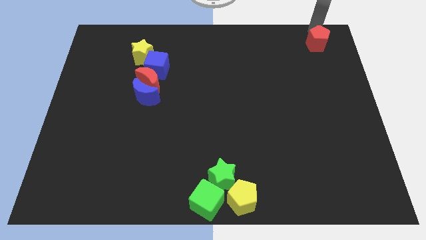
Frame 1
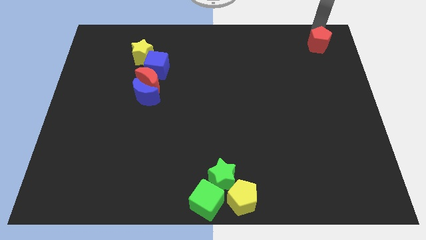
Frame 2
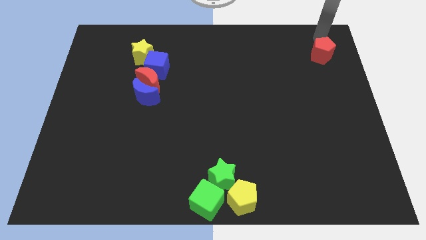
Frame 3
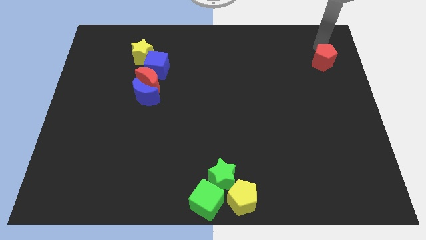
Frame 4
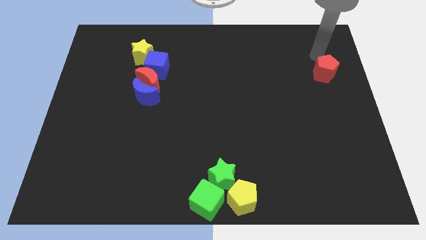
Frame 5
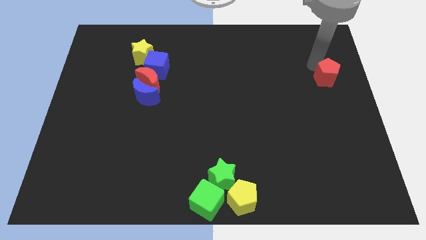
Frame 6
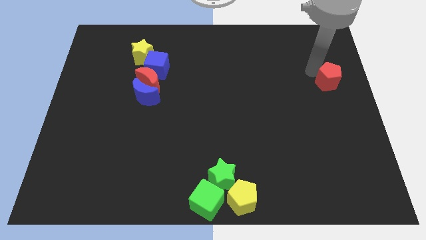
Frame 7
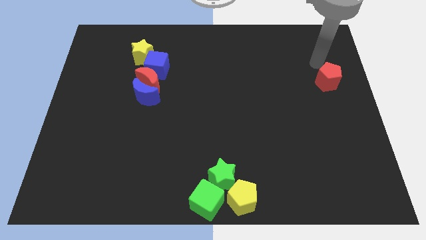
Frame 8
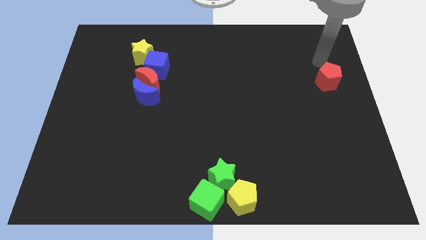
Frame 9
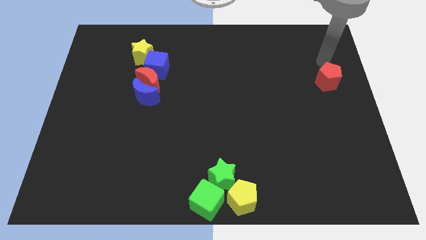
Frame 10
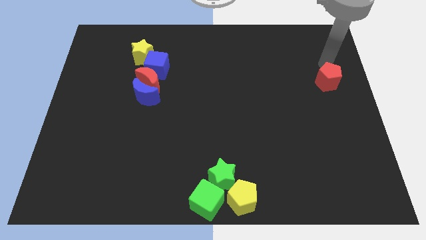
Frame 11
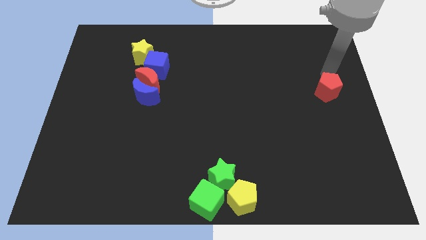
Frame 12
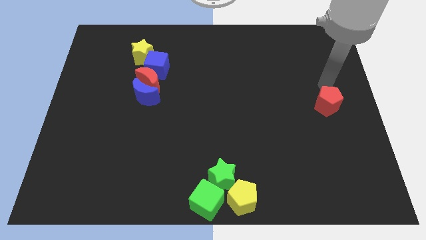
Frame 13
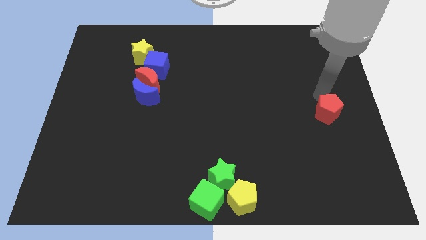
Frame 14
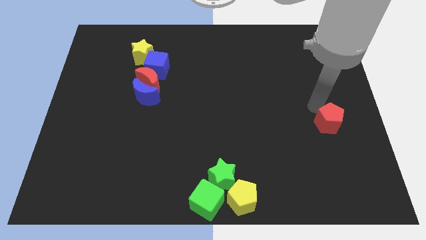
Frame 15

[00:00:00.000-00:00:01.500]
push red pentagon towards the bottom of the board

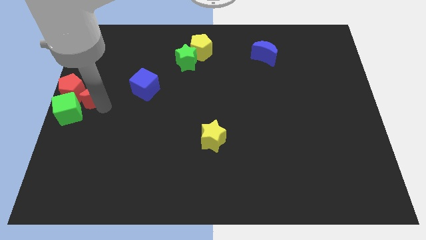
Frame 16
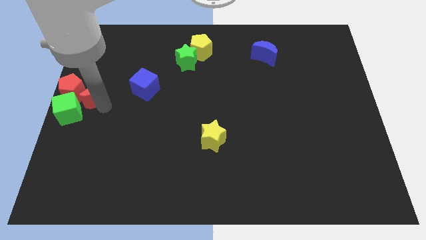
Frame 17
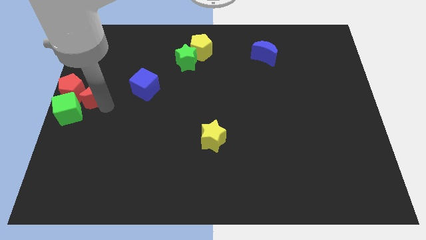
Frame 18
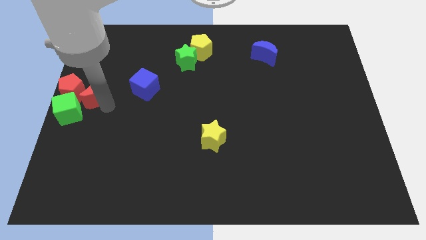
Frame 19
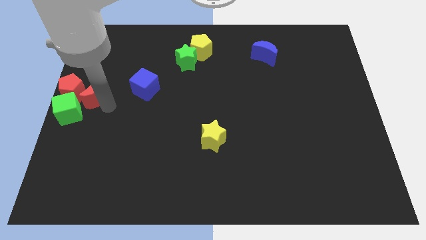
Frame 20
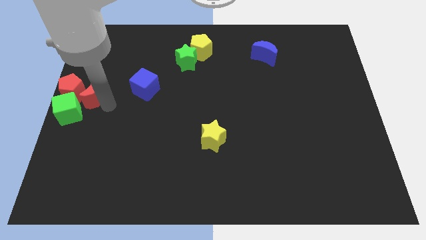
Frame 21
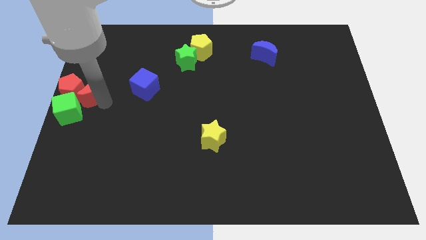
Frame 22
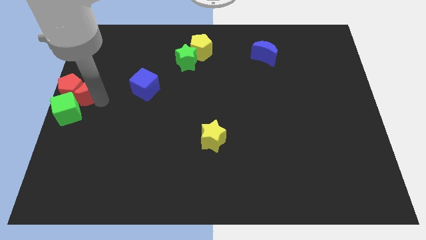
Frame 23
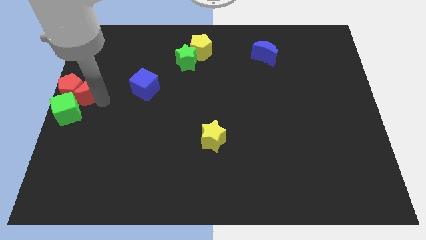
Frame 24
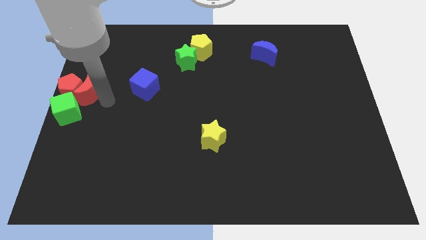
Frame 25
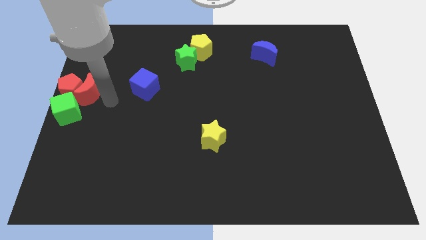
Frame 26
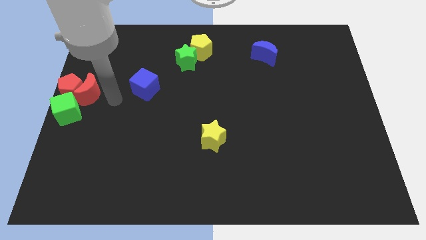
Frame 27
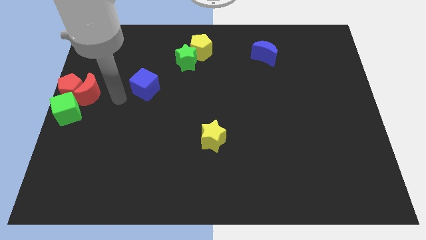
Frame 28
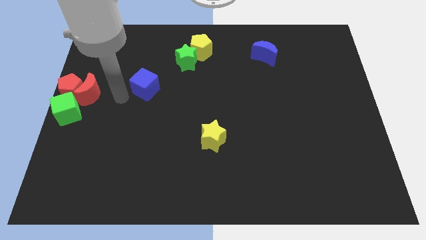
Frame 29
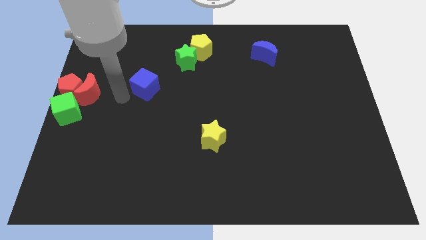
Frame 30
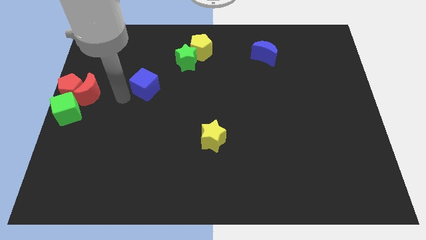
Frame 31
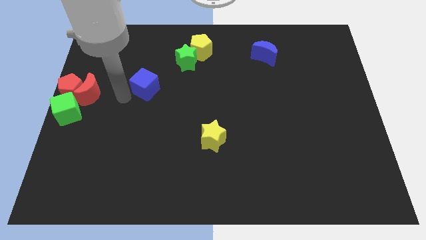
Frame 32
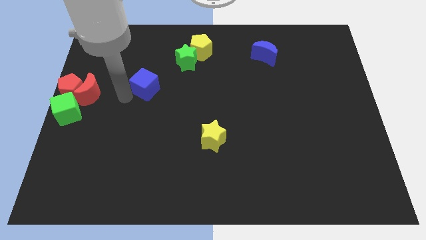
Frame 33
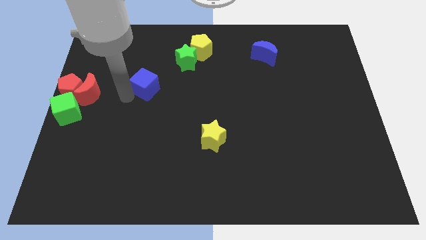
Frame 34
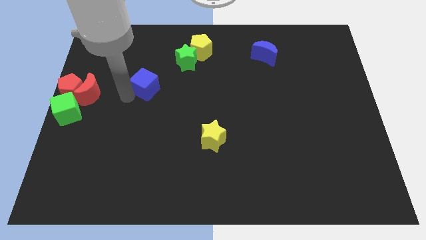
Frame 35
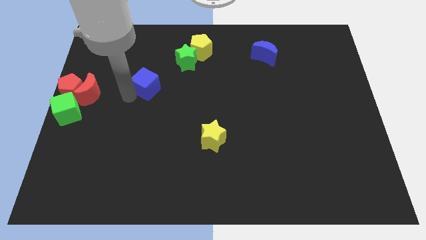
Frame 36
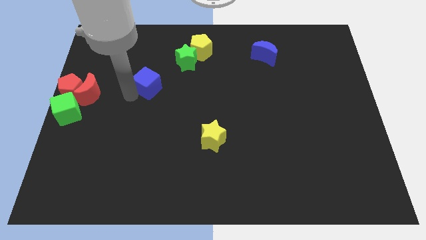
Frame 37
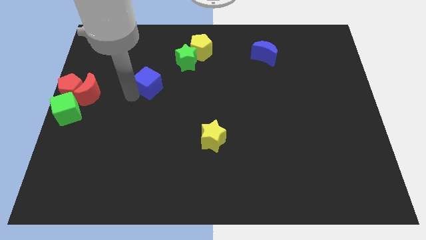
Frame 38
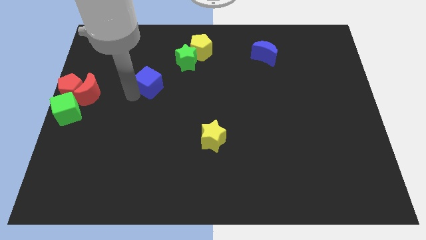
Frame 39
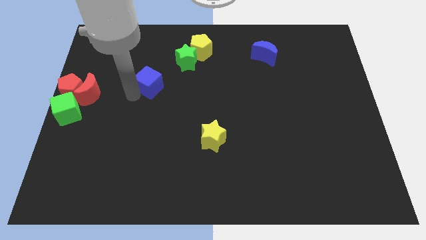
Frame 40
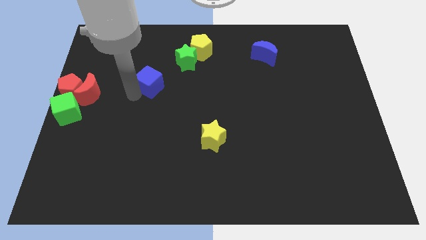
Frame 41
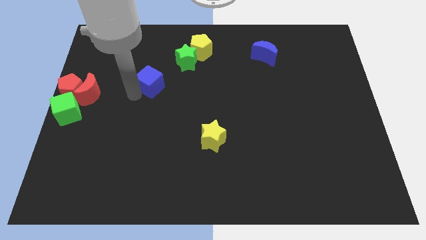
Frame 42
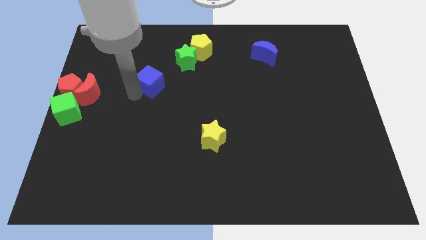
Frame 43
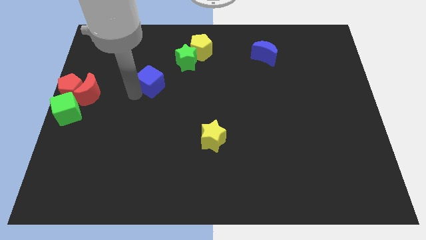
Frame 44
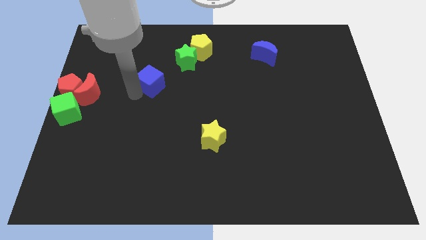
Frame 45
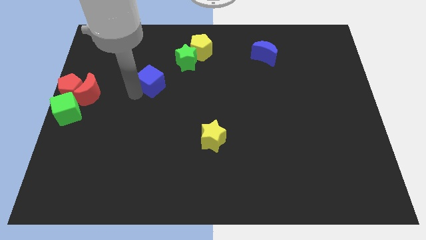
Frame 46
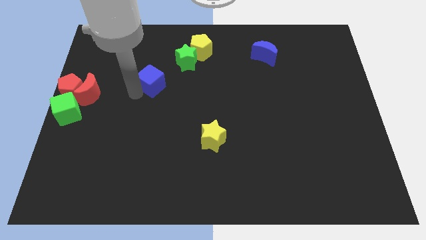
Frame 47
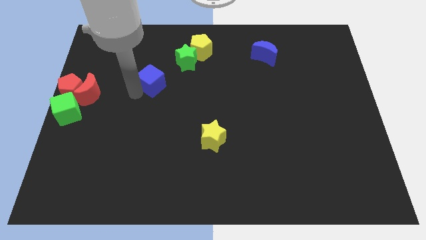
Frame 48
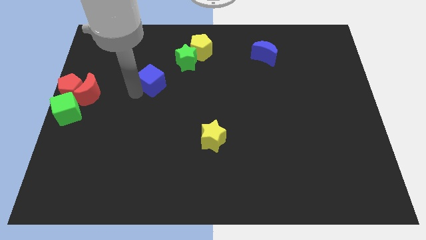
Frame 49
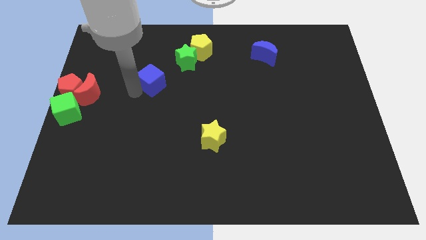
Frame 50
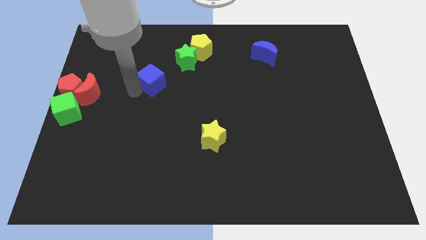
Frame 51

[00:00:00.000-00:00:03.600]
push blue cube towards green star

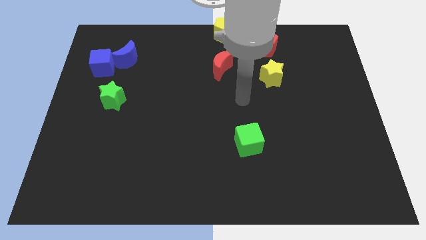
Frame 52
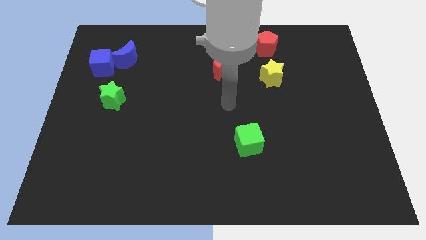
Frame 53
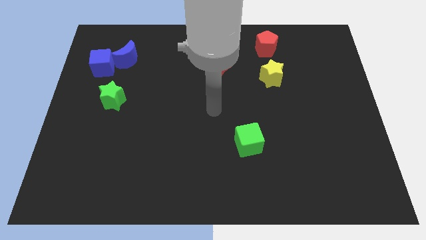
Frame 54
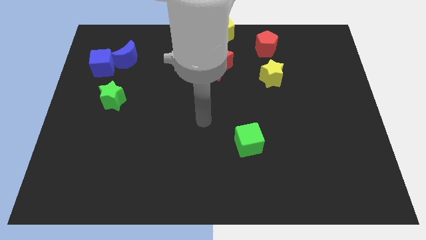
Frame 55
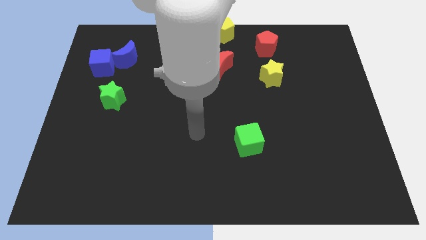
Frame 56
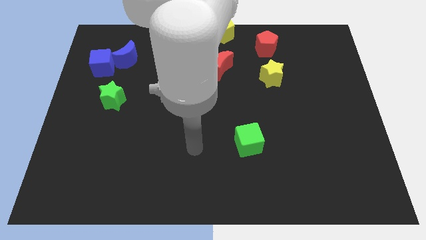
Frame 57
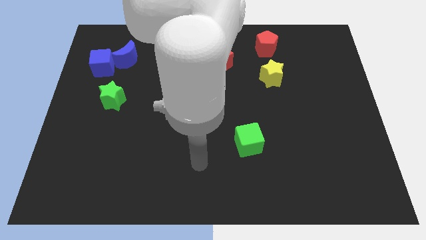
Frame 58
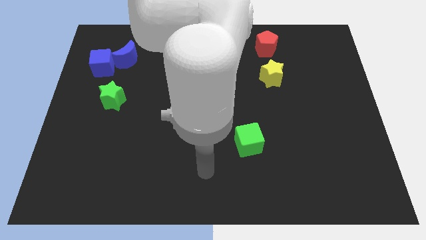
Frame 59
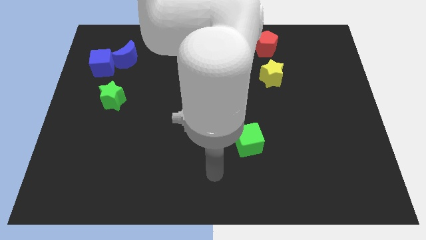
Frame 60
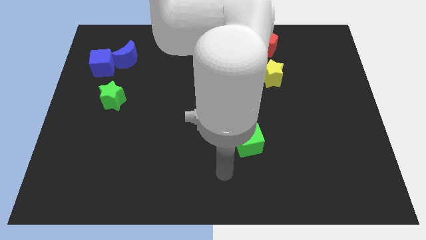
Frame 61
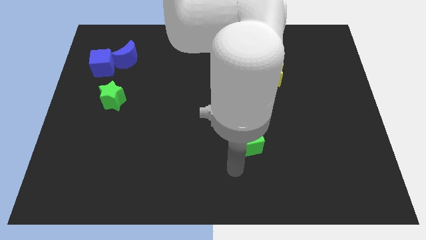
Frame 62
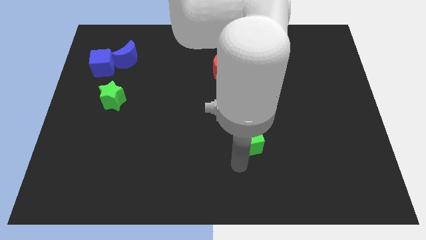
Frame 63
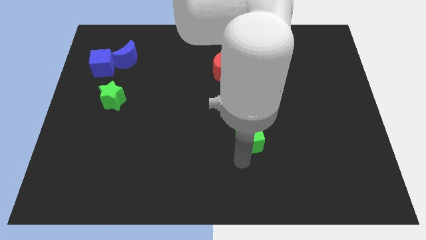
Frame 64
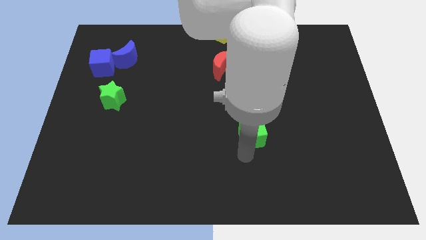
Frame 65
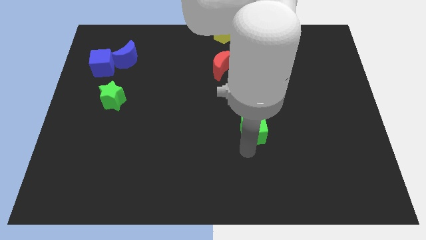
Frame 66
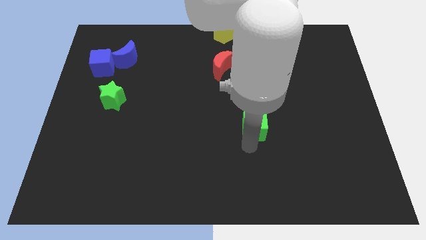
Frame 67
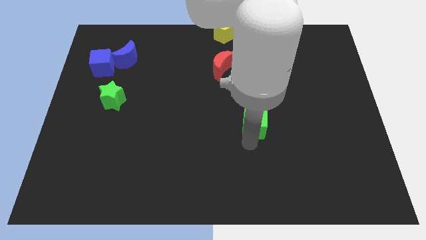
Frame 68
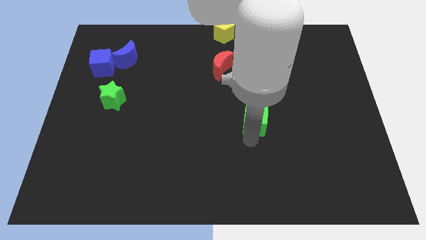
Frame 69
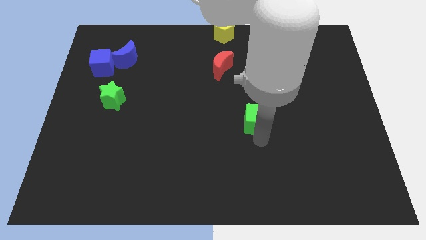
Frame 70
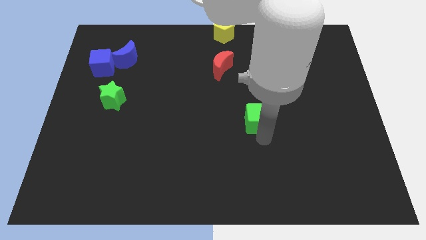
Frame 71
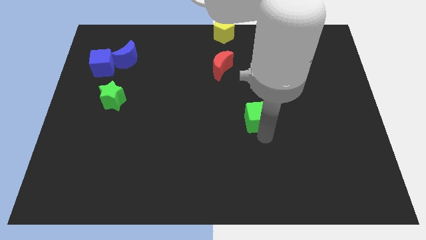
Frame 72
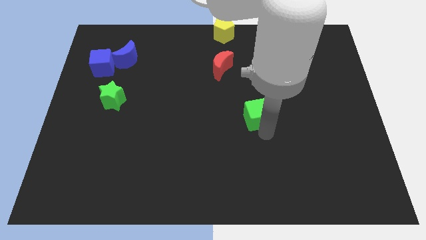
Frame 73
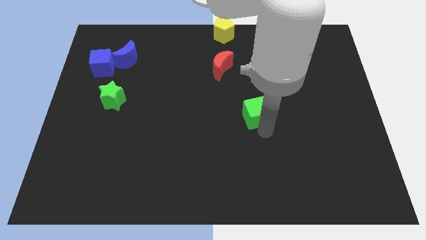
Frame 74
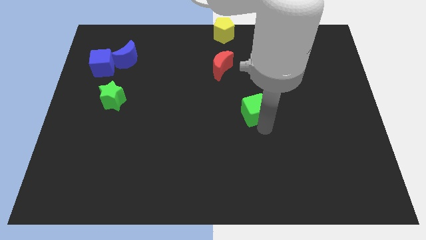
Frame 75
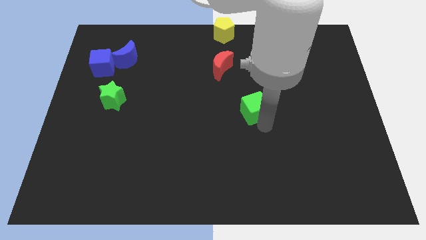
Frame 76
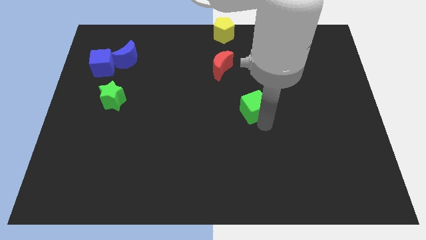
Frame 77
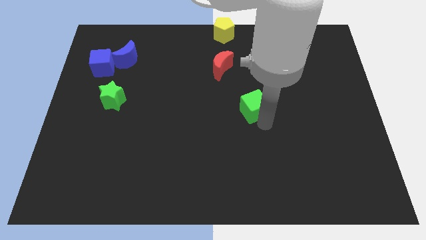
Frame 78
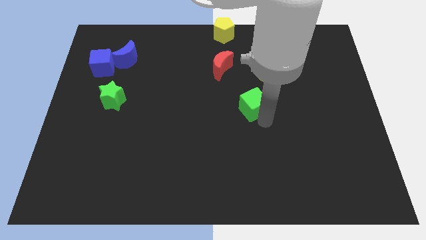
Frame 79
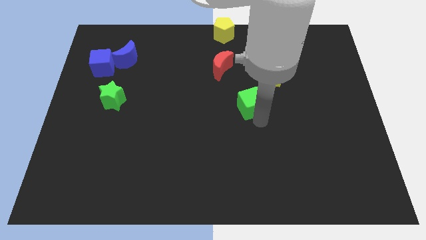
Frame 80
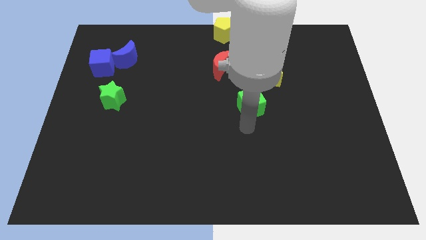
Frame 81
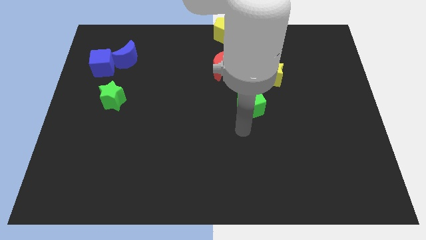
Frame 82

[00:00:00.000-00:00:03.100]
place green cube below yellow star

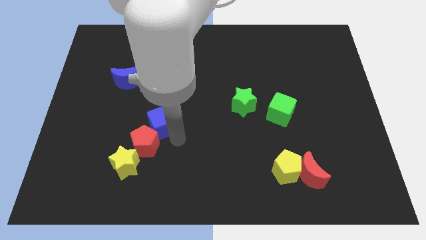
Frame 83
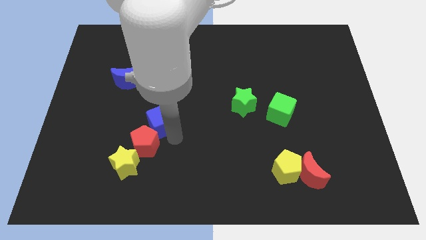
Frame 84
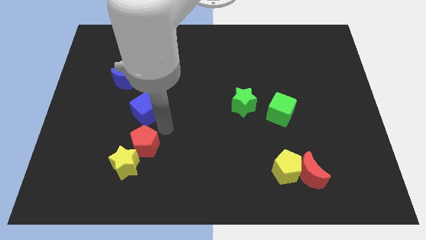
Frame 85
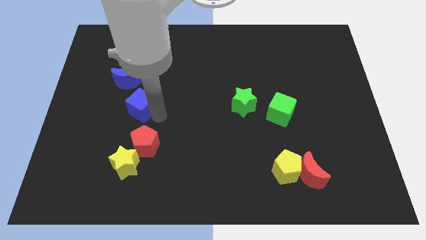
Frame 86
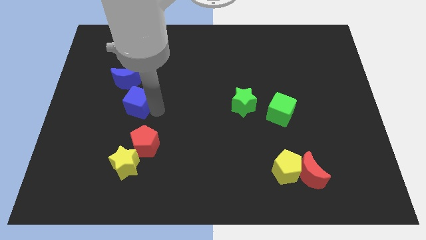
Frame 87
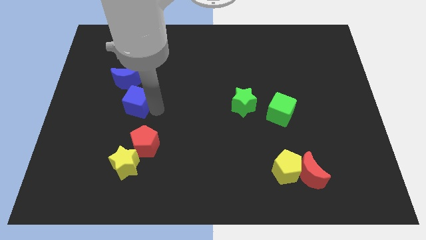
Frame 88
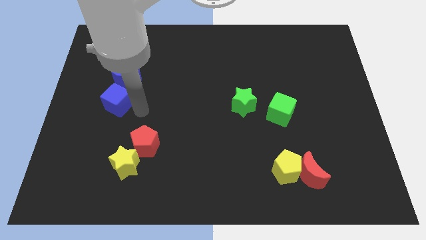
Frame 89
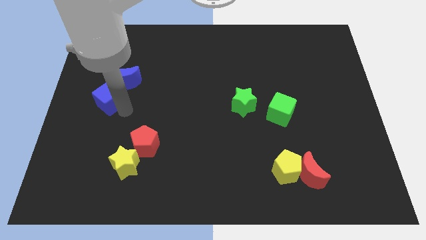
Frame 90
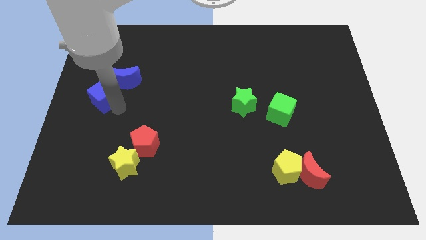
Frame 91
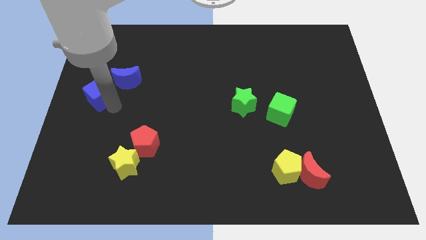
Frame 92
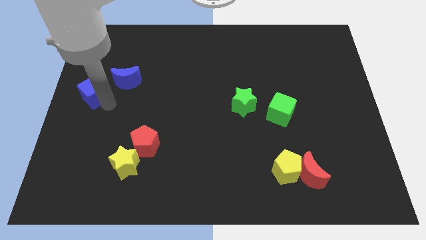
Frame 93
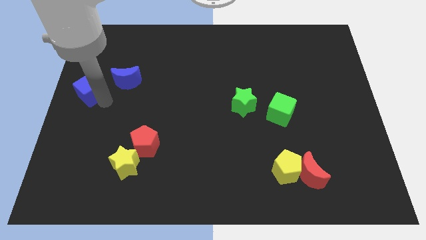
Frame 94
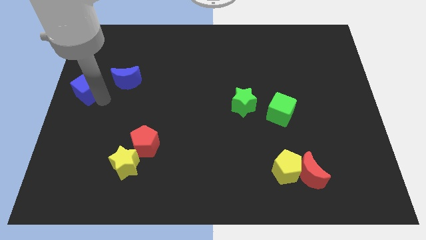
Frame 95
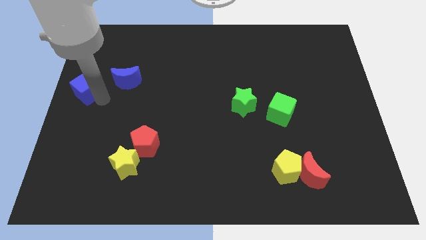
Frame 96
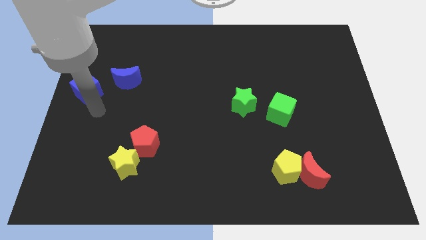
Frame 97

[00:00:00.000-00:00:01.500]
place the blue cube left to the blue moon
